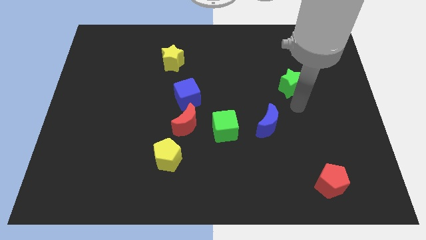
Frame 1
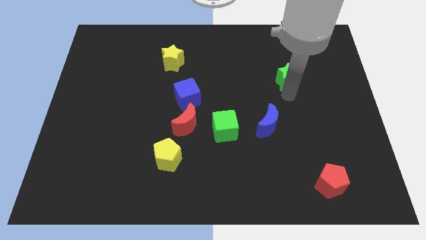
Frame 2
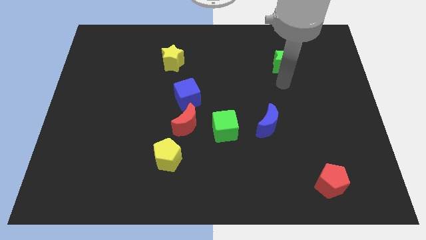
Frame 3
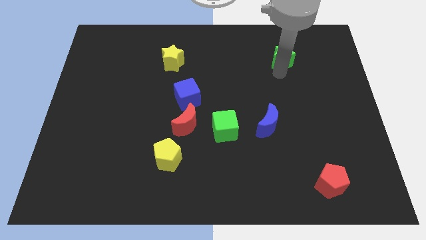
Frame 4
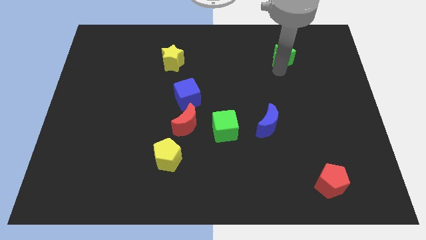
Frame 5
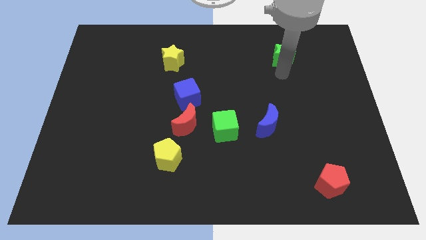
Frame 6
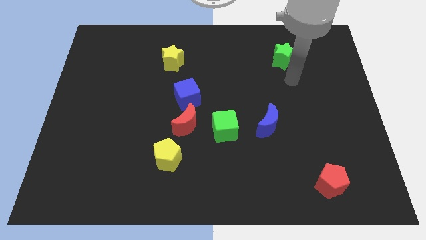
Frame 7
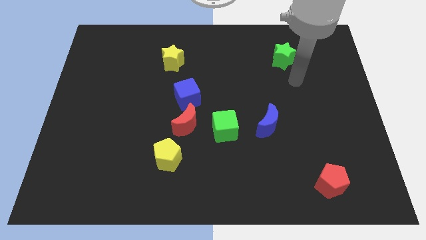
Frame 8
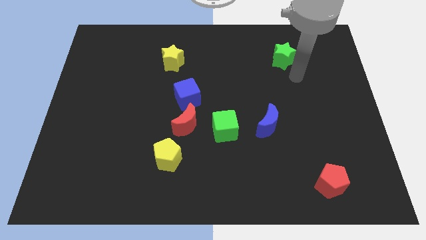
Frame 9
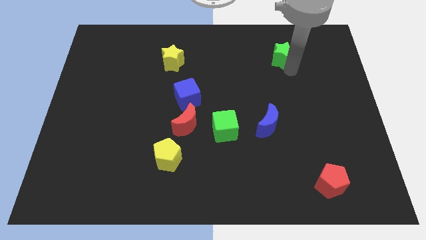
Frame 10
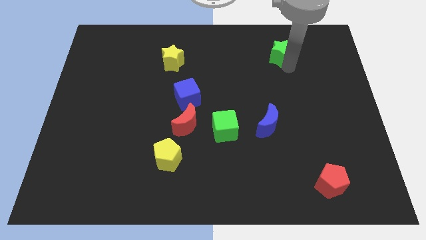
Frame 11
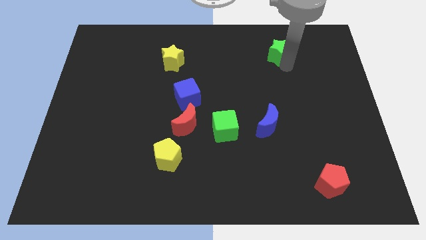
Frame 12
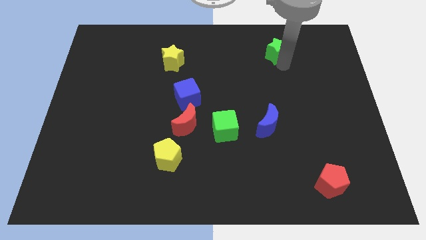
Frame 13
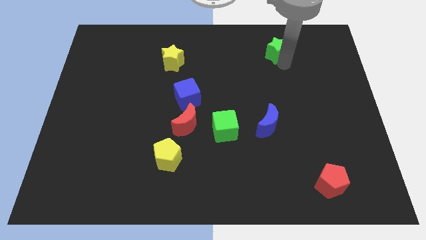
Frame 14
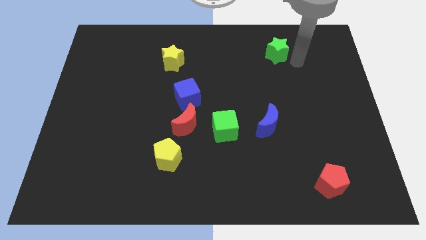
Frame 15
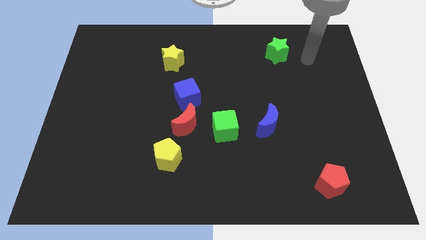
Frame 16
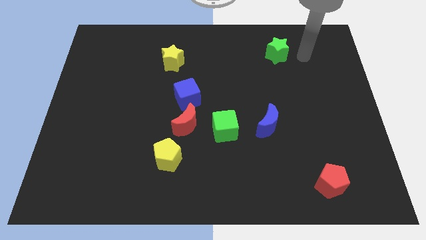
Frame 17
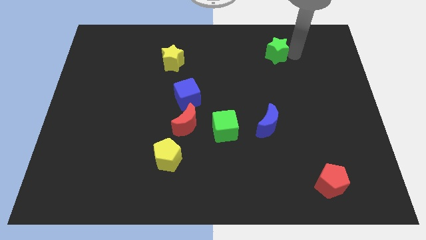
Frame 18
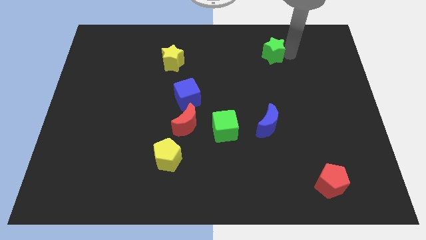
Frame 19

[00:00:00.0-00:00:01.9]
slide the green star to the top side

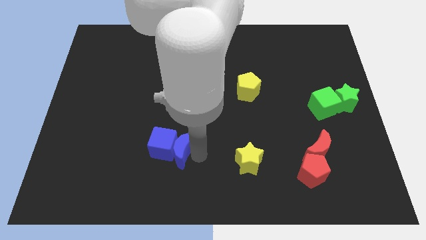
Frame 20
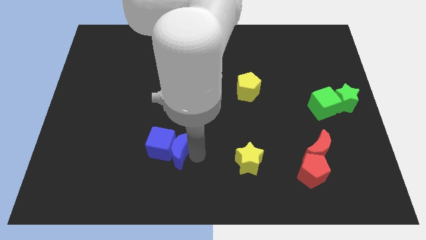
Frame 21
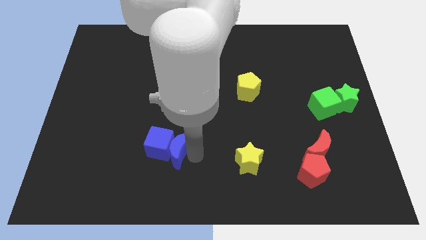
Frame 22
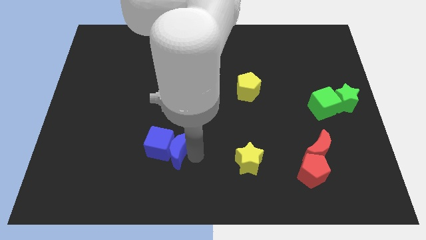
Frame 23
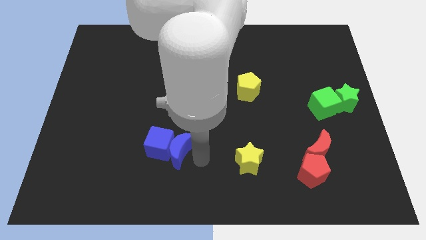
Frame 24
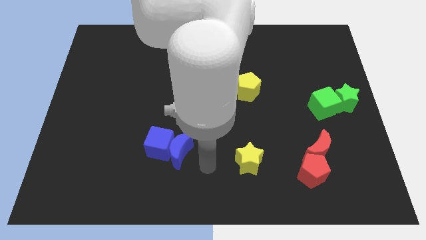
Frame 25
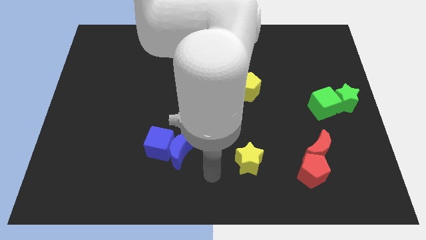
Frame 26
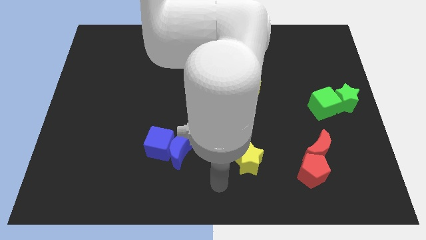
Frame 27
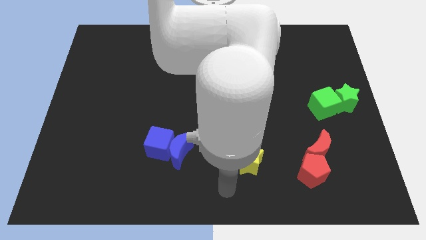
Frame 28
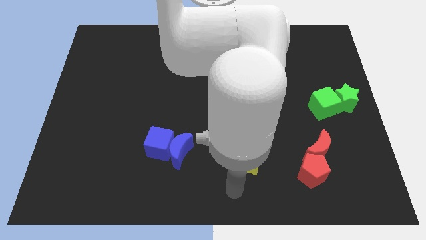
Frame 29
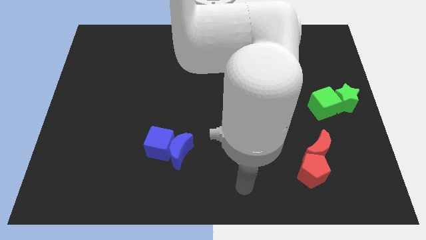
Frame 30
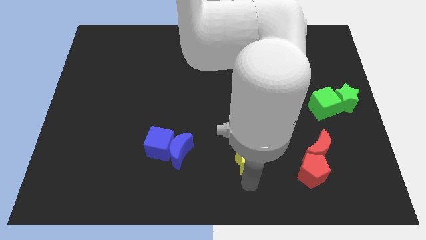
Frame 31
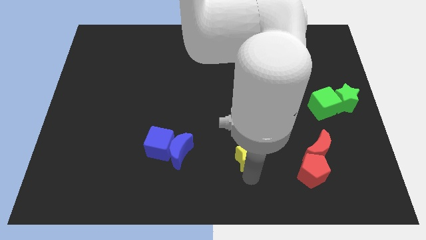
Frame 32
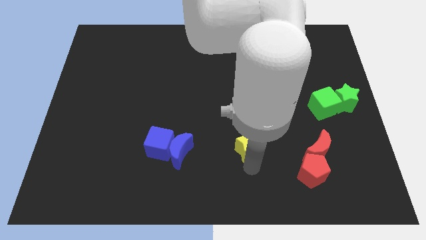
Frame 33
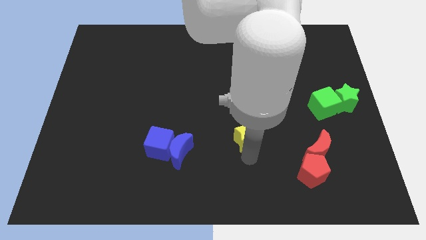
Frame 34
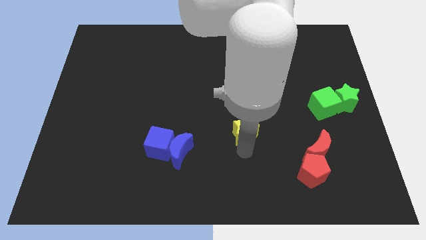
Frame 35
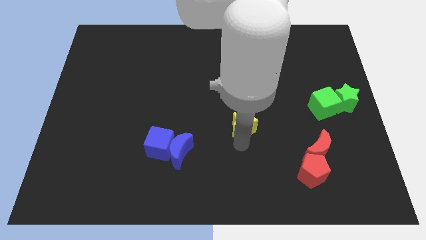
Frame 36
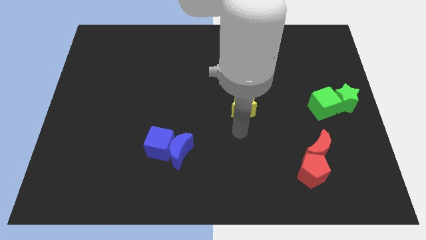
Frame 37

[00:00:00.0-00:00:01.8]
push the yellow star towards upside of the board

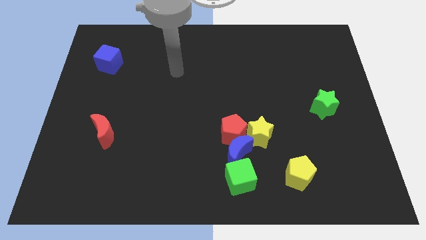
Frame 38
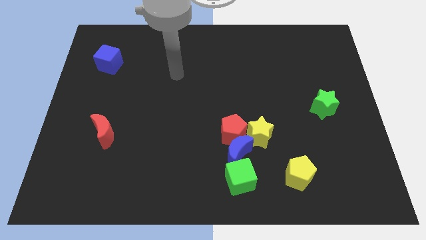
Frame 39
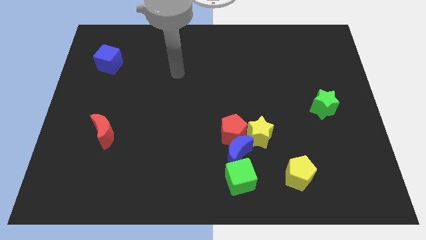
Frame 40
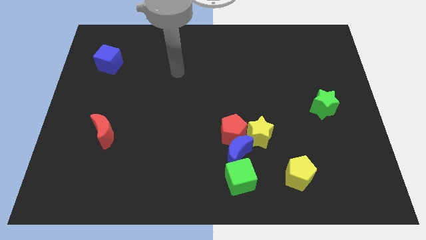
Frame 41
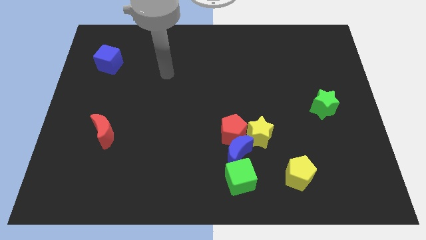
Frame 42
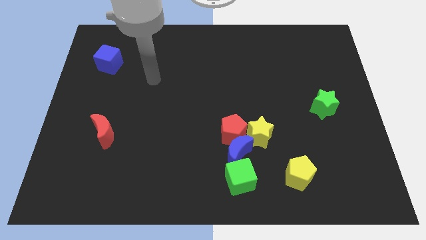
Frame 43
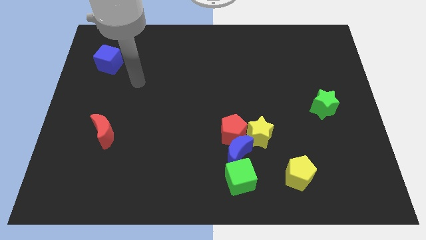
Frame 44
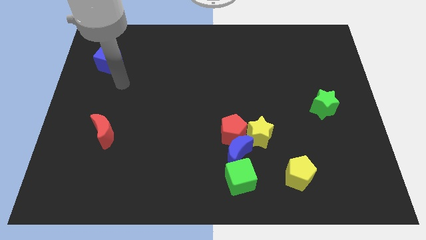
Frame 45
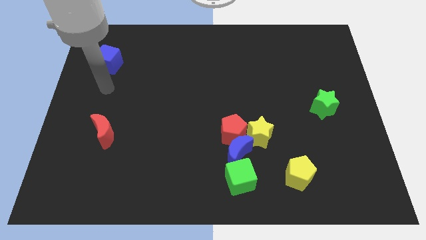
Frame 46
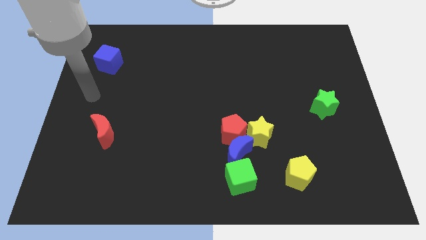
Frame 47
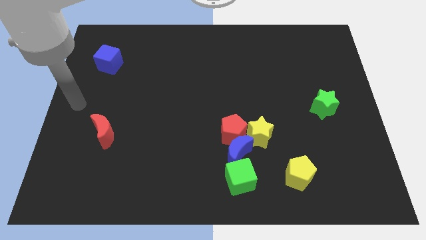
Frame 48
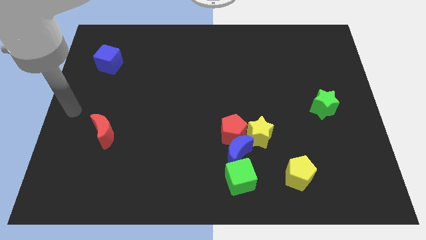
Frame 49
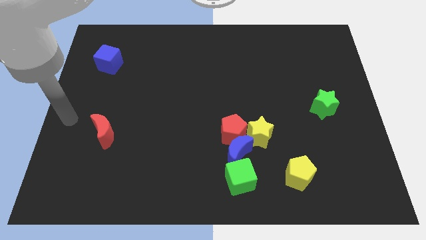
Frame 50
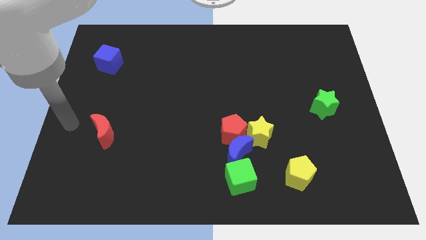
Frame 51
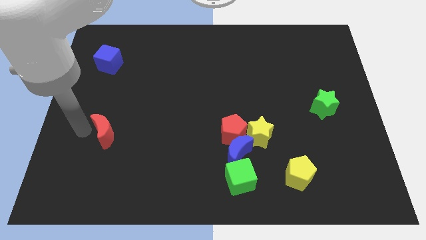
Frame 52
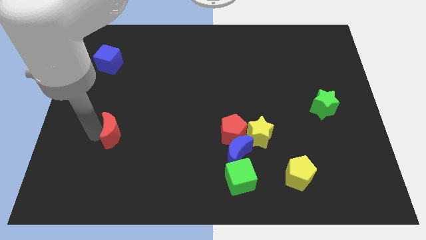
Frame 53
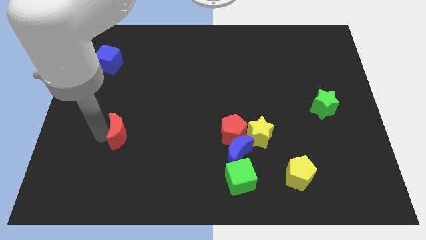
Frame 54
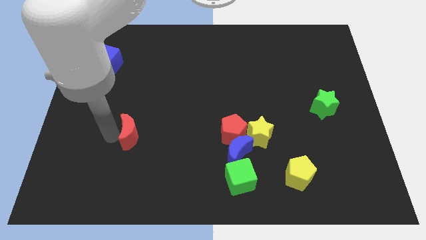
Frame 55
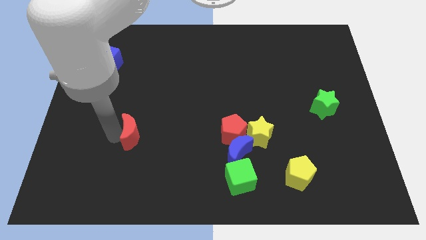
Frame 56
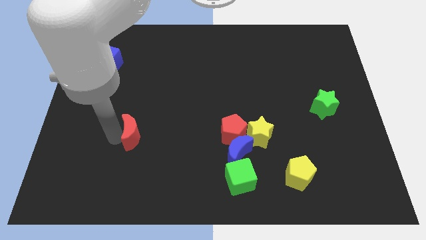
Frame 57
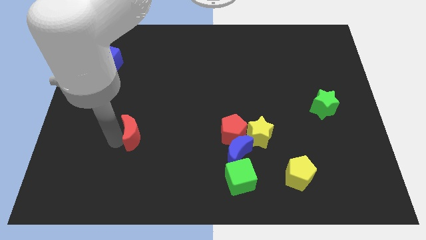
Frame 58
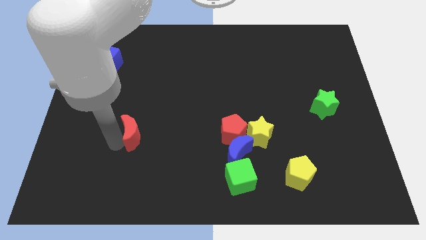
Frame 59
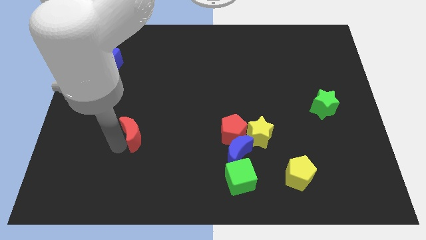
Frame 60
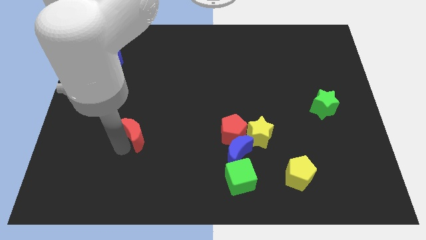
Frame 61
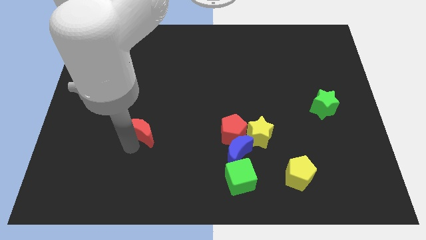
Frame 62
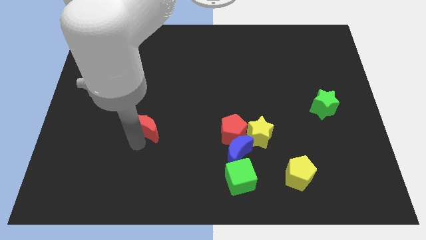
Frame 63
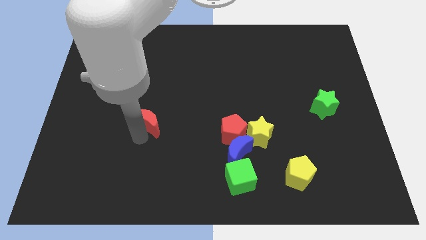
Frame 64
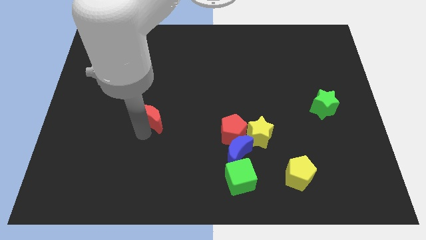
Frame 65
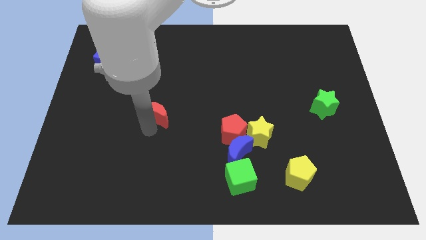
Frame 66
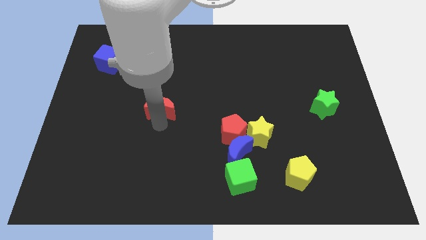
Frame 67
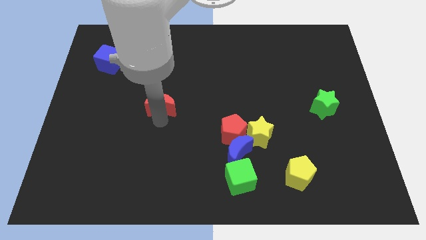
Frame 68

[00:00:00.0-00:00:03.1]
slide red moon horizontal to green star

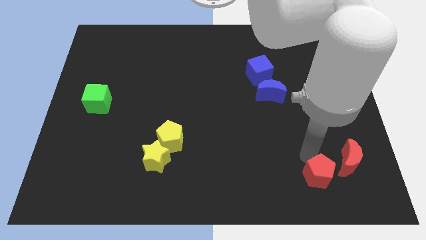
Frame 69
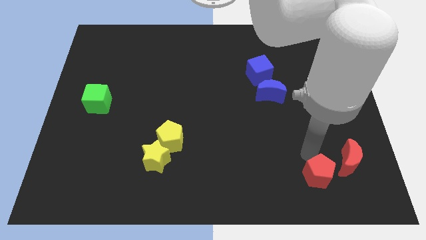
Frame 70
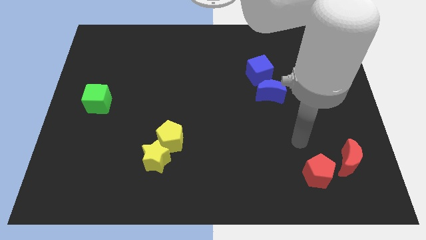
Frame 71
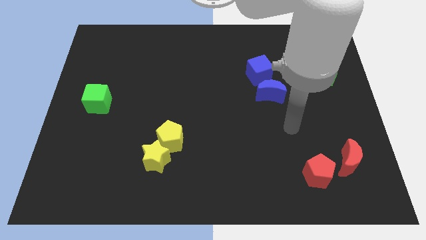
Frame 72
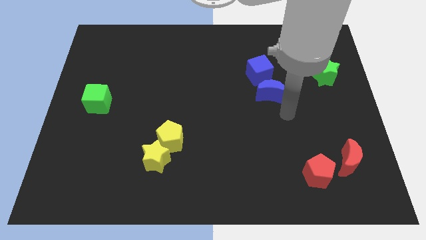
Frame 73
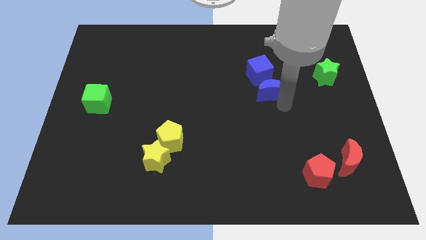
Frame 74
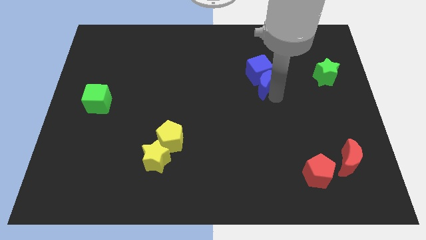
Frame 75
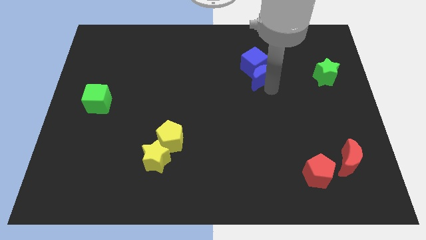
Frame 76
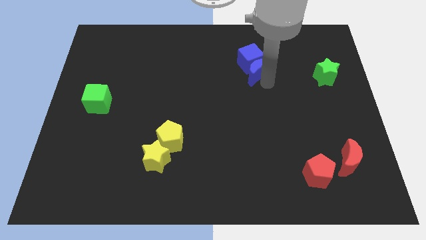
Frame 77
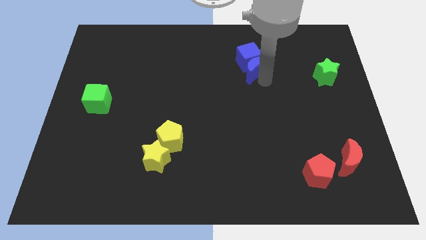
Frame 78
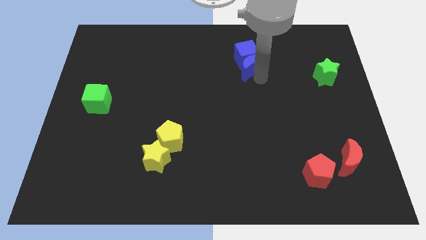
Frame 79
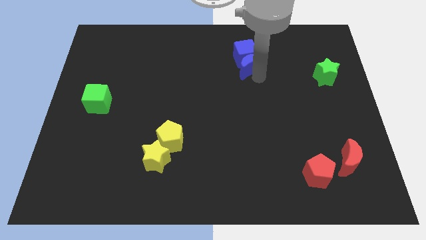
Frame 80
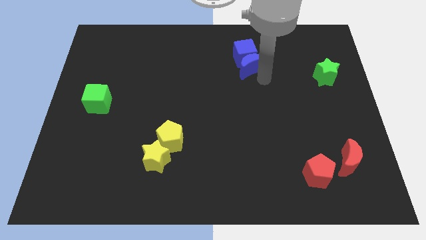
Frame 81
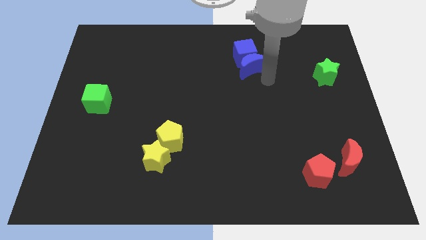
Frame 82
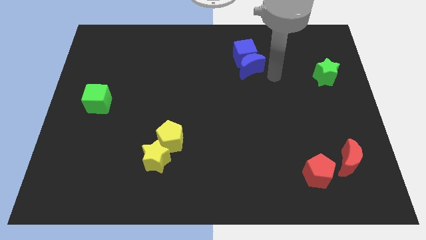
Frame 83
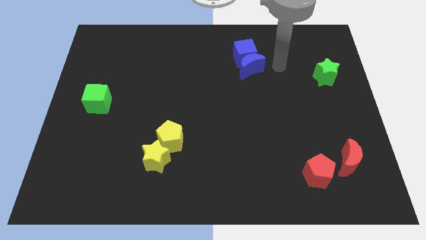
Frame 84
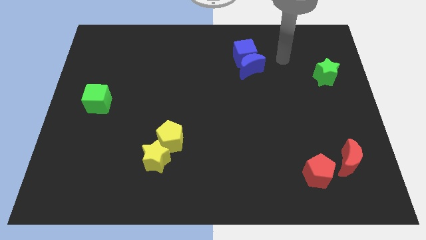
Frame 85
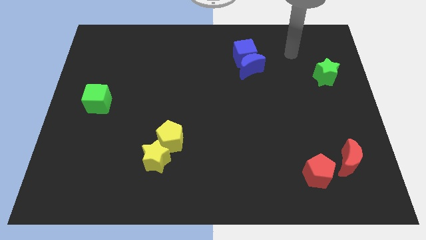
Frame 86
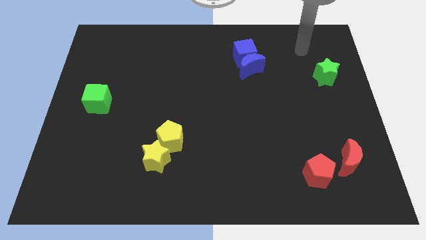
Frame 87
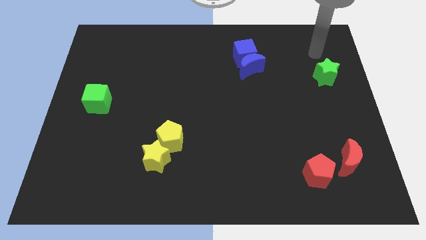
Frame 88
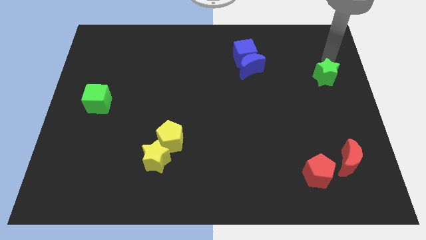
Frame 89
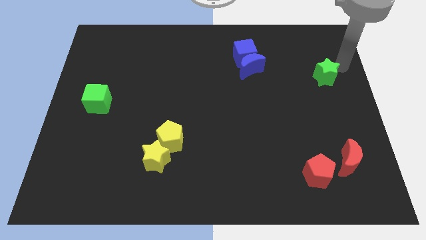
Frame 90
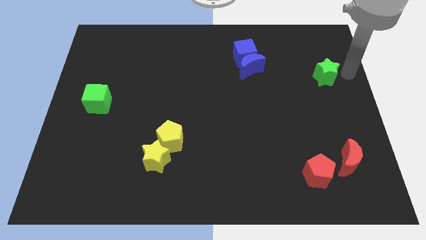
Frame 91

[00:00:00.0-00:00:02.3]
slide the group of blue blocks towards the top side of the board
